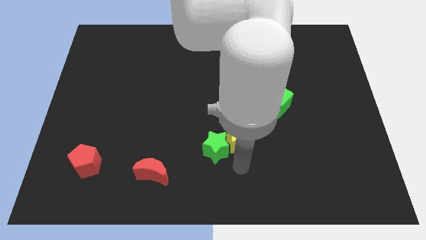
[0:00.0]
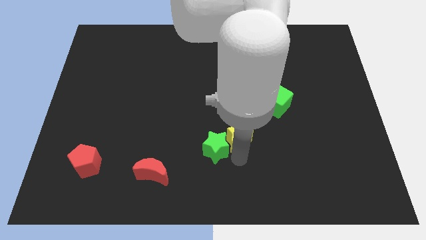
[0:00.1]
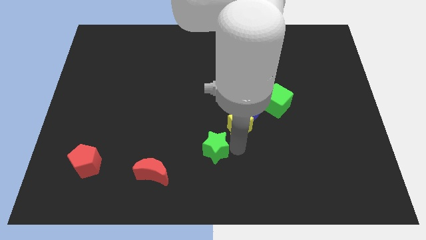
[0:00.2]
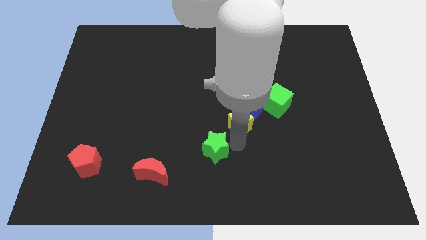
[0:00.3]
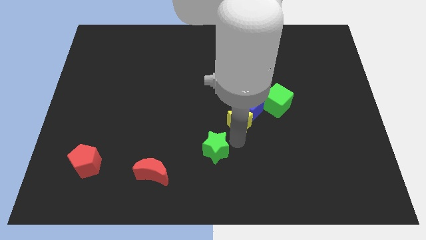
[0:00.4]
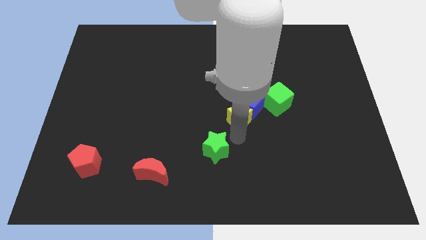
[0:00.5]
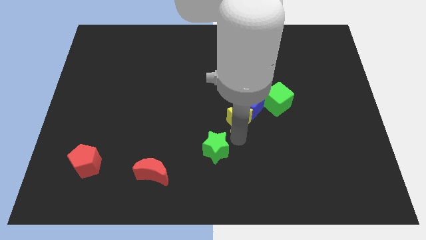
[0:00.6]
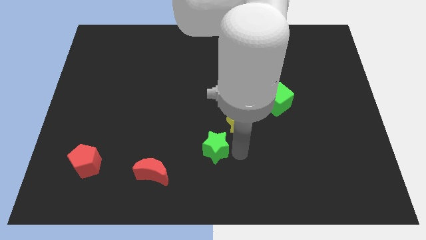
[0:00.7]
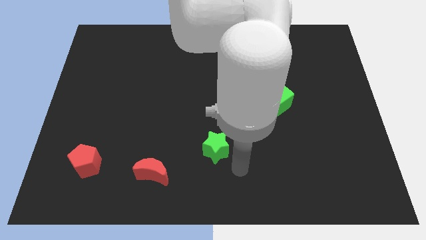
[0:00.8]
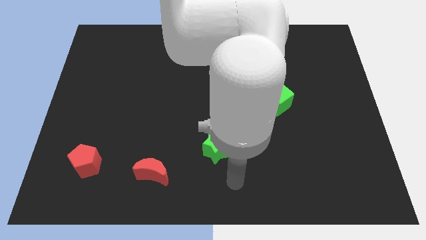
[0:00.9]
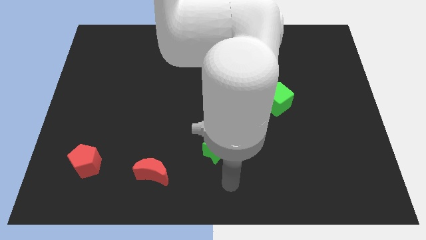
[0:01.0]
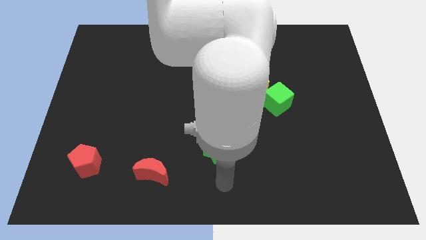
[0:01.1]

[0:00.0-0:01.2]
move the yellow star into the blue cube

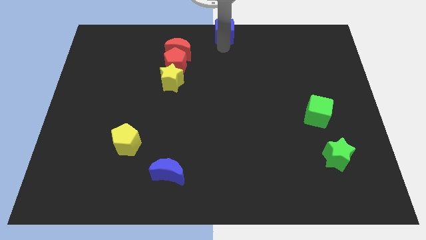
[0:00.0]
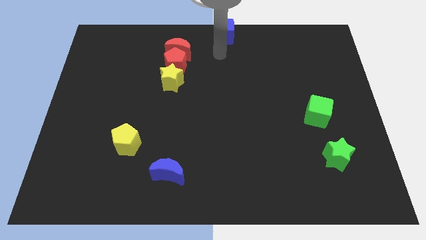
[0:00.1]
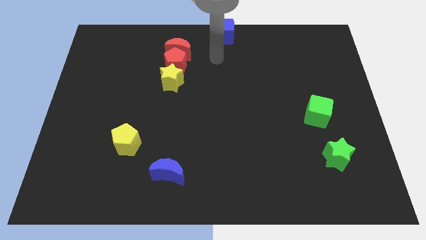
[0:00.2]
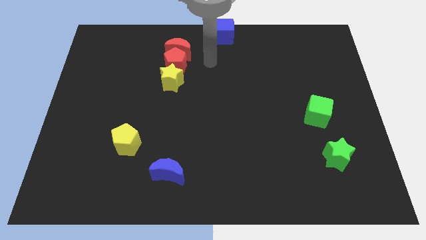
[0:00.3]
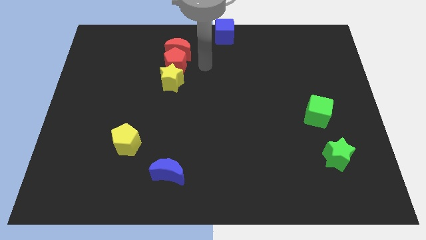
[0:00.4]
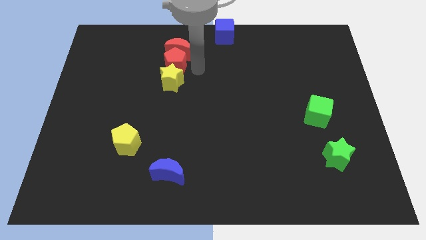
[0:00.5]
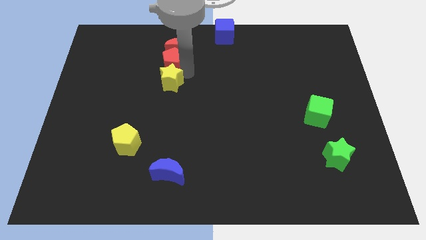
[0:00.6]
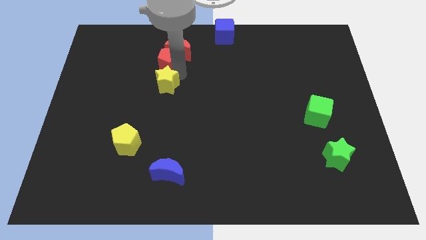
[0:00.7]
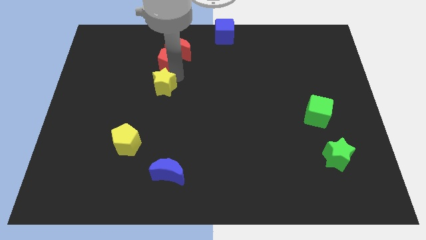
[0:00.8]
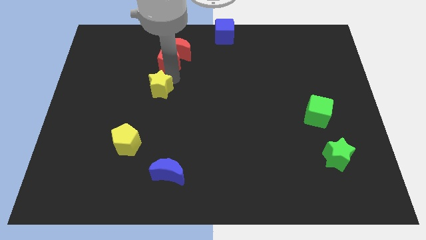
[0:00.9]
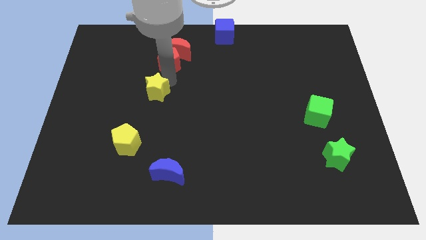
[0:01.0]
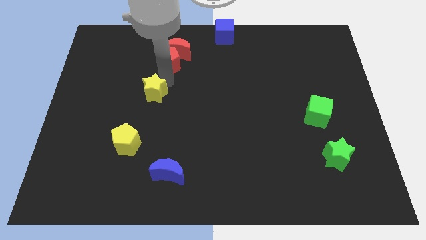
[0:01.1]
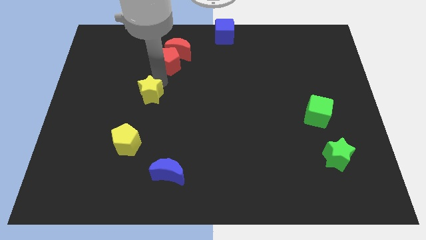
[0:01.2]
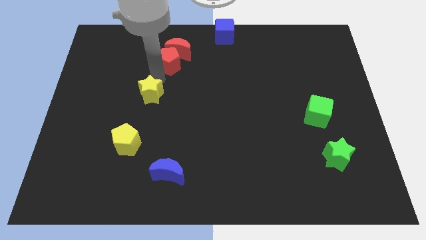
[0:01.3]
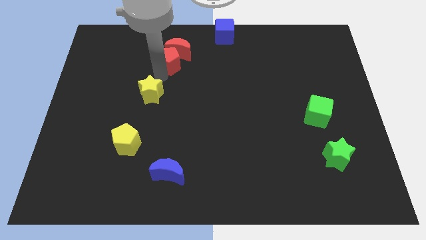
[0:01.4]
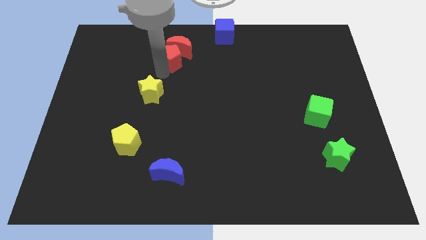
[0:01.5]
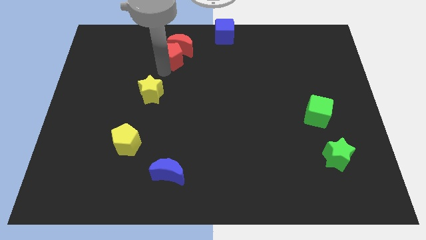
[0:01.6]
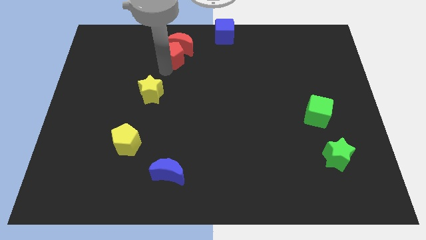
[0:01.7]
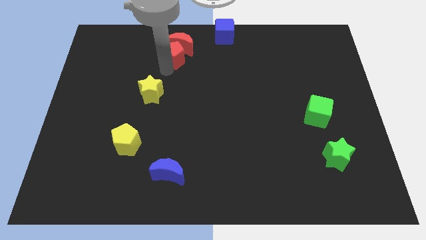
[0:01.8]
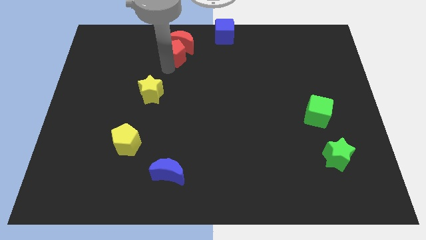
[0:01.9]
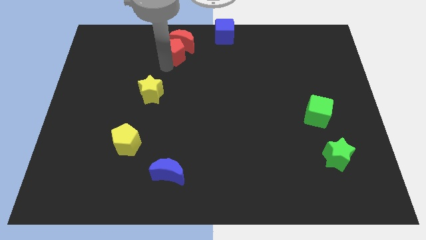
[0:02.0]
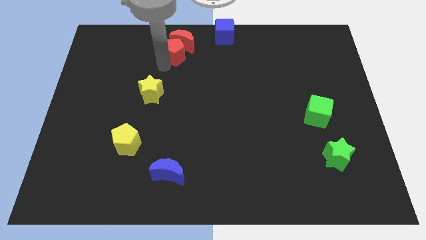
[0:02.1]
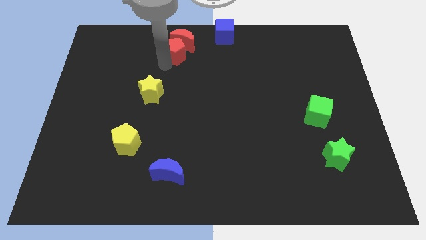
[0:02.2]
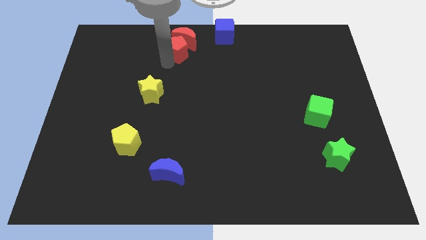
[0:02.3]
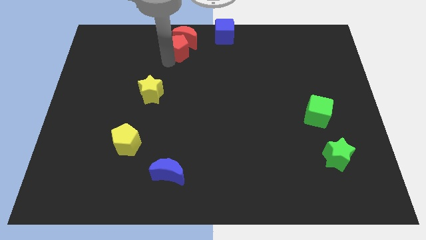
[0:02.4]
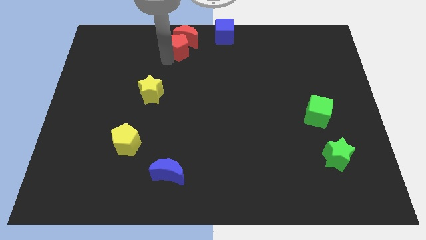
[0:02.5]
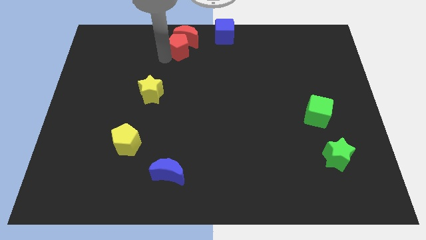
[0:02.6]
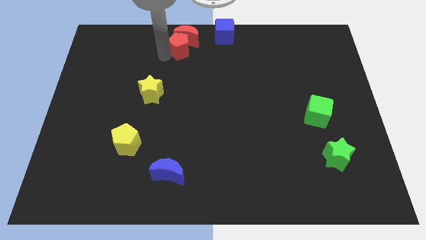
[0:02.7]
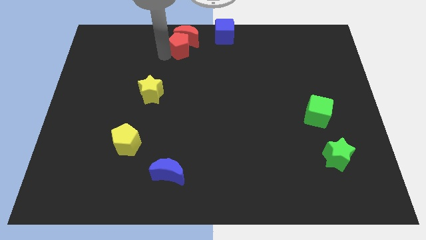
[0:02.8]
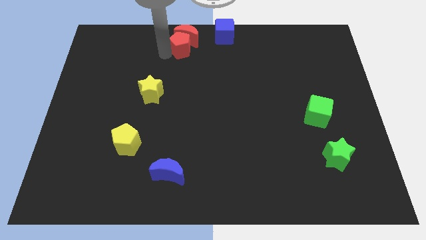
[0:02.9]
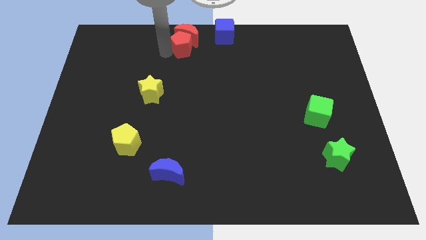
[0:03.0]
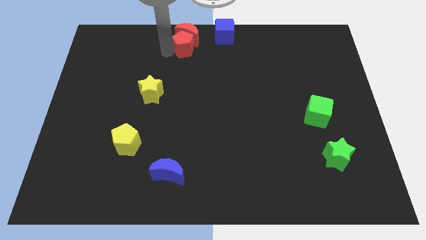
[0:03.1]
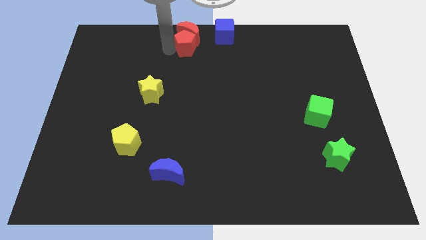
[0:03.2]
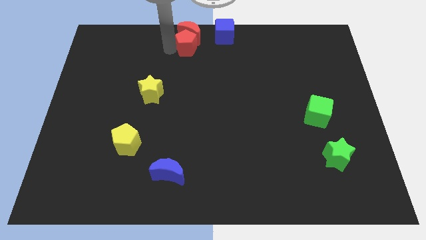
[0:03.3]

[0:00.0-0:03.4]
move the red blocks towards top center of the board

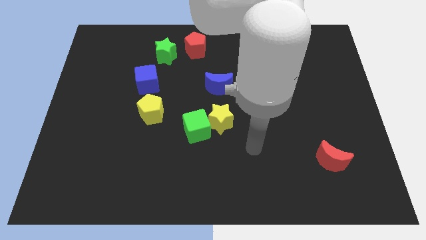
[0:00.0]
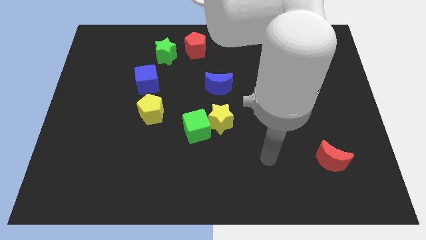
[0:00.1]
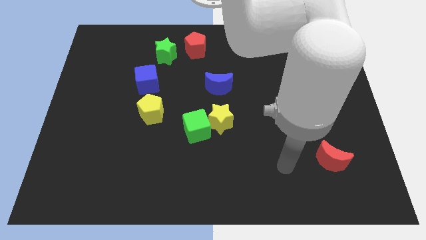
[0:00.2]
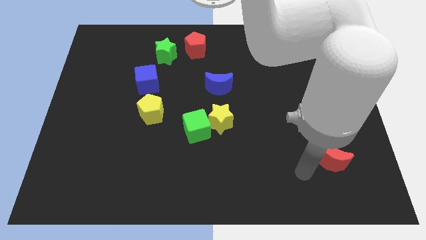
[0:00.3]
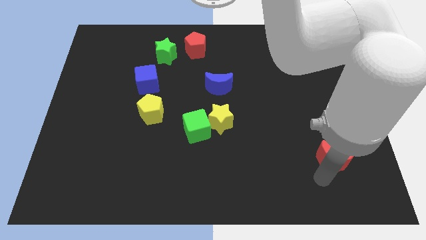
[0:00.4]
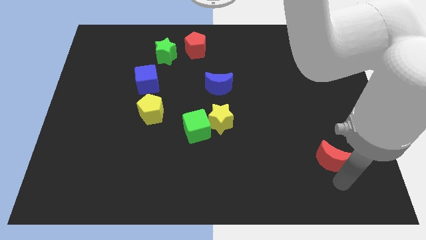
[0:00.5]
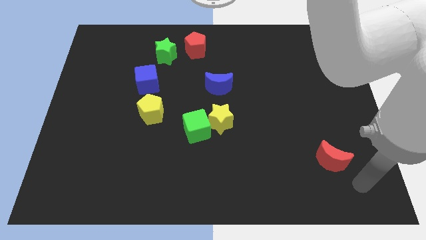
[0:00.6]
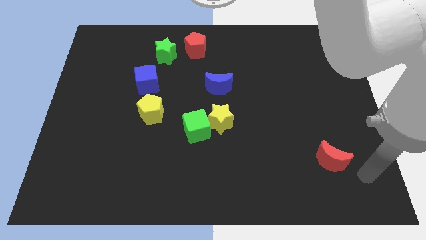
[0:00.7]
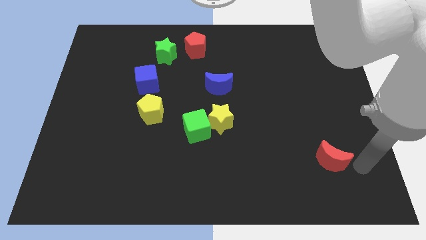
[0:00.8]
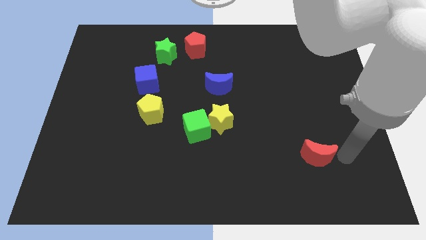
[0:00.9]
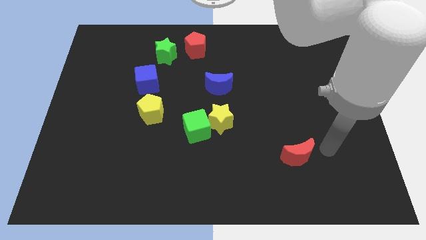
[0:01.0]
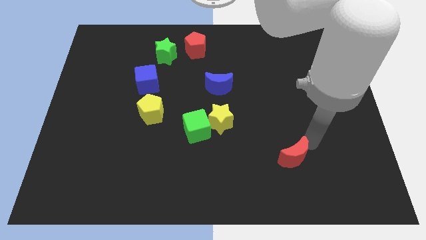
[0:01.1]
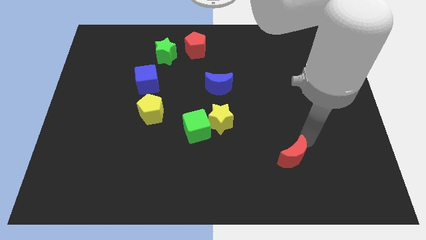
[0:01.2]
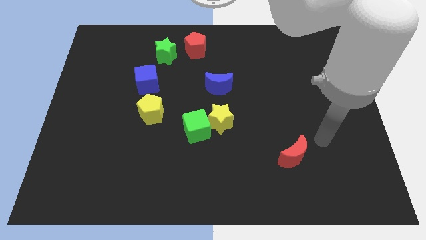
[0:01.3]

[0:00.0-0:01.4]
push the red moon towards the group of blocks

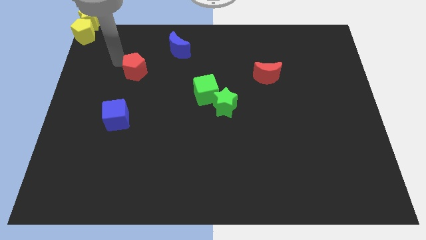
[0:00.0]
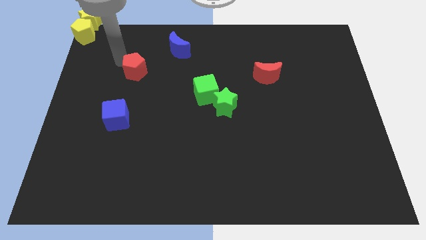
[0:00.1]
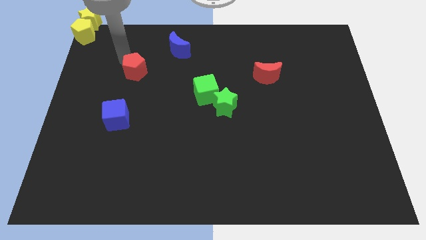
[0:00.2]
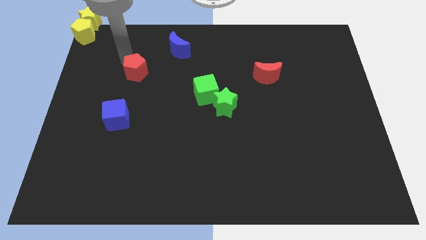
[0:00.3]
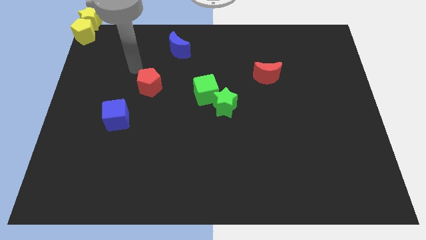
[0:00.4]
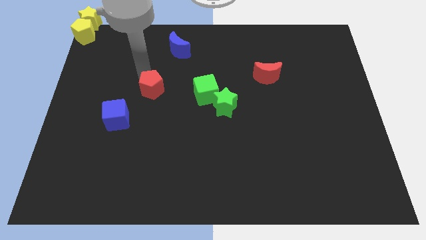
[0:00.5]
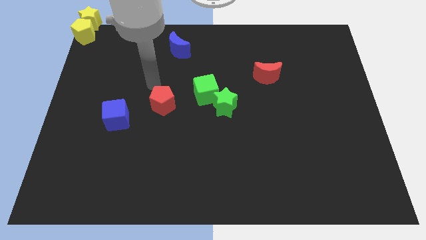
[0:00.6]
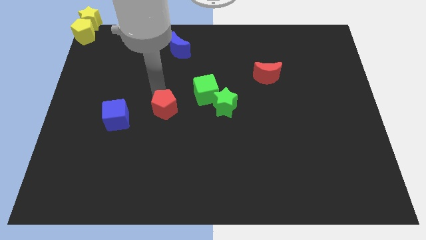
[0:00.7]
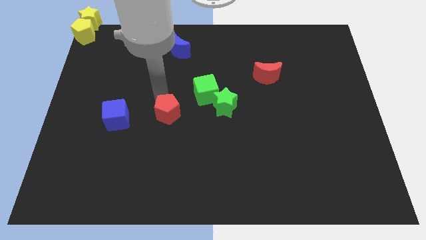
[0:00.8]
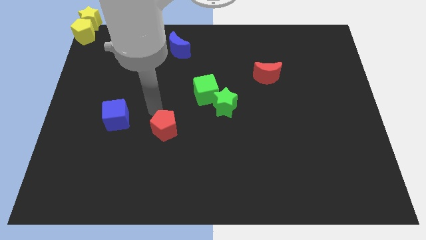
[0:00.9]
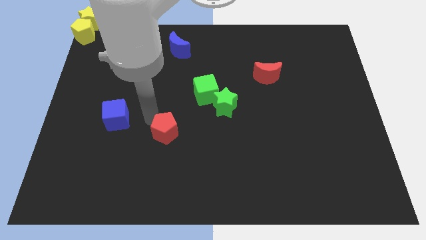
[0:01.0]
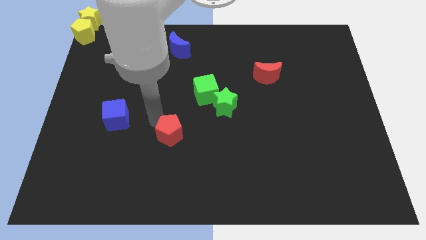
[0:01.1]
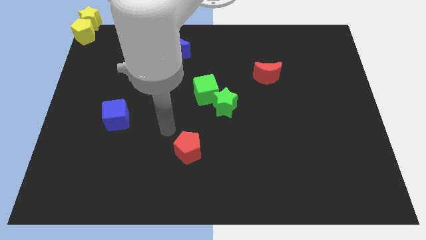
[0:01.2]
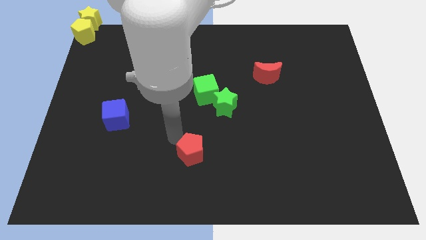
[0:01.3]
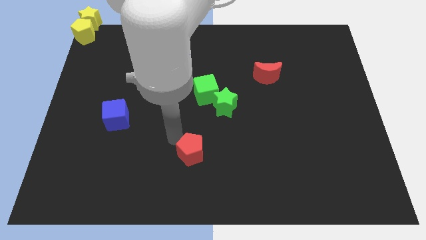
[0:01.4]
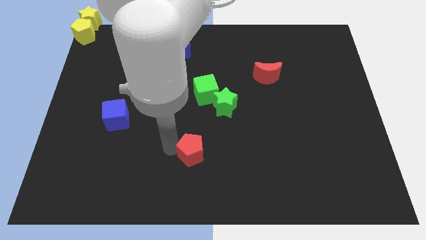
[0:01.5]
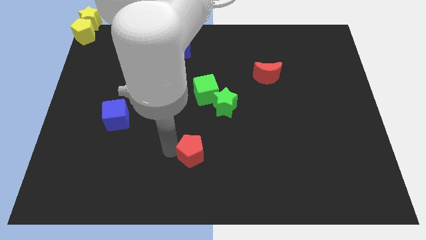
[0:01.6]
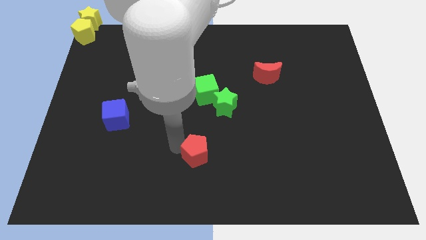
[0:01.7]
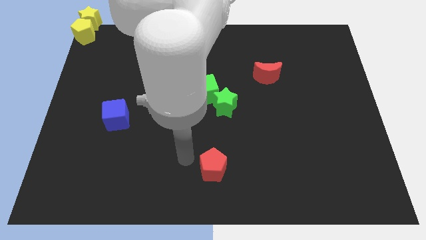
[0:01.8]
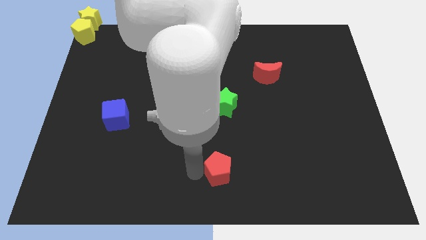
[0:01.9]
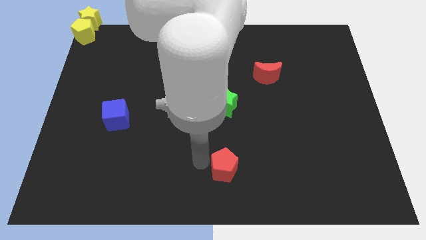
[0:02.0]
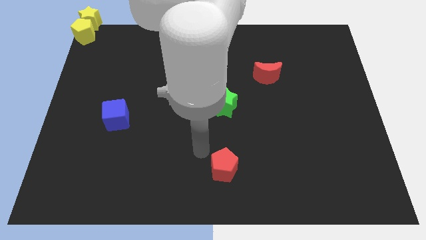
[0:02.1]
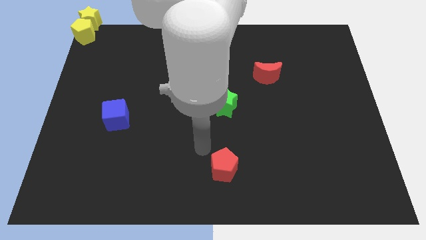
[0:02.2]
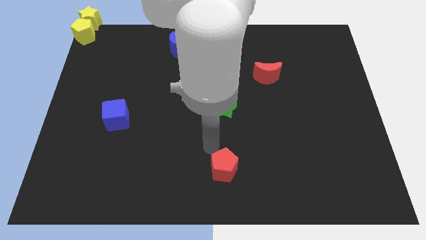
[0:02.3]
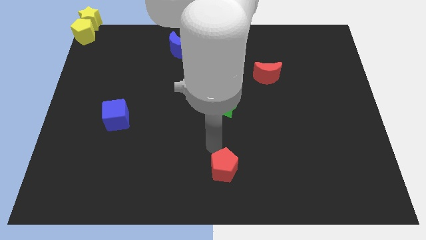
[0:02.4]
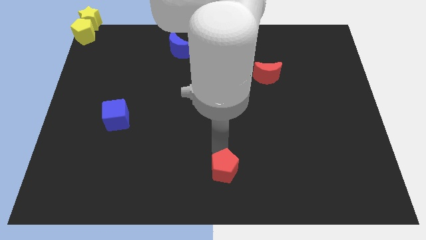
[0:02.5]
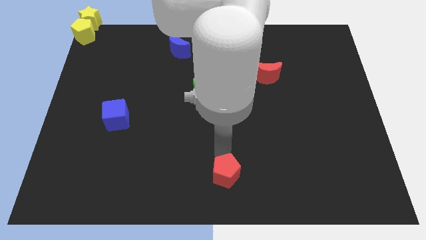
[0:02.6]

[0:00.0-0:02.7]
push the red pentagon parallel bottom of the green star

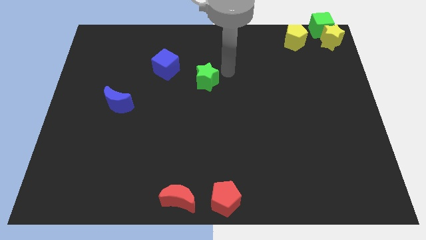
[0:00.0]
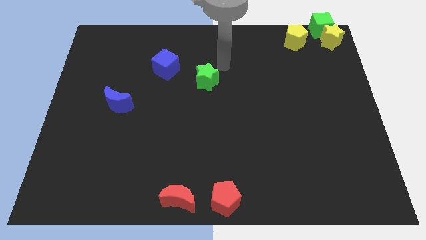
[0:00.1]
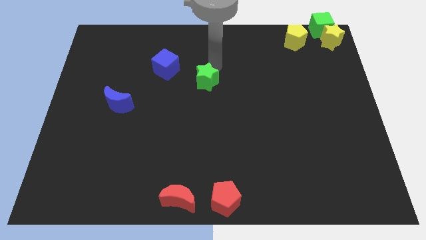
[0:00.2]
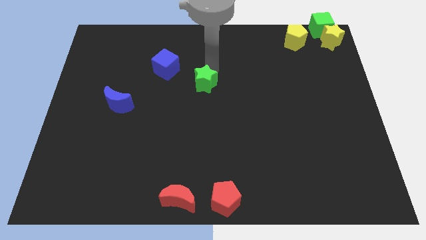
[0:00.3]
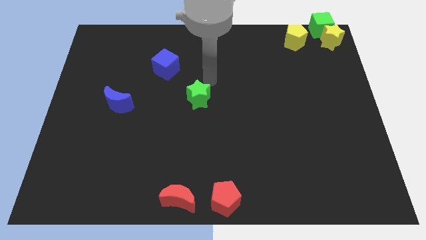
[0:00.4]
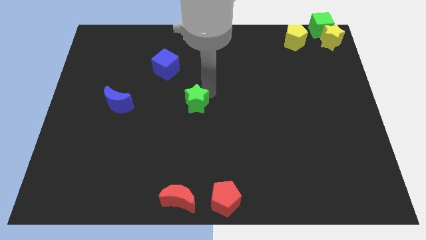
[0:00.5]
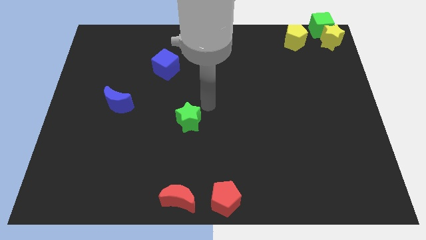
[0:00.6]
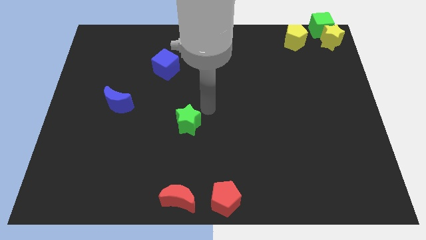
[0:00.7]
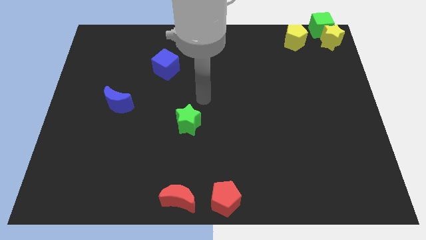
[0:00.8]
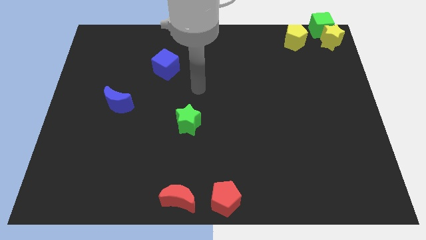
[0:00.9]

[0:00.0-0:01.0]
move the green star towards the red crescent
